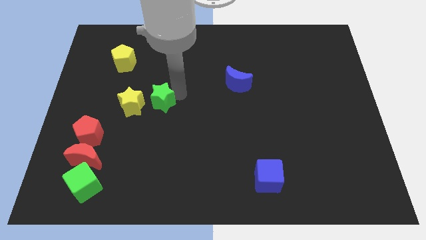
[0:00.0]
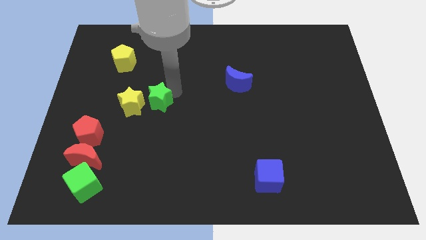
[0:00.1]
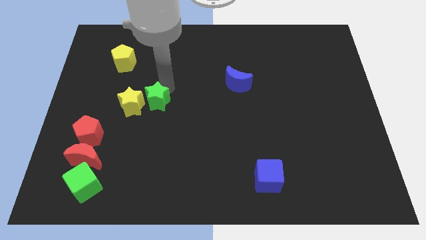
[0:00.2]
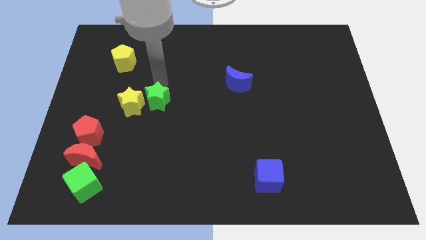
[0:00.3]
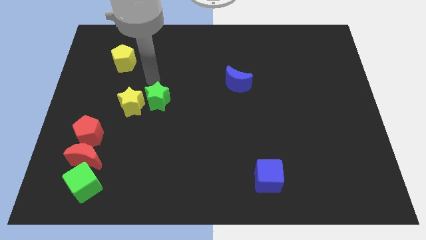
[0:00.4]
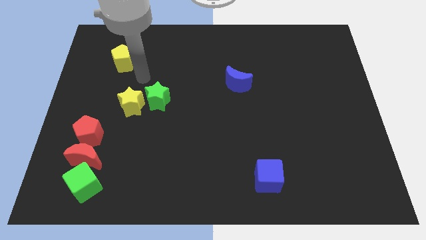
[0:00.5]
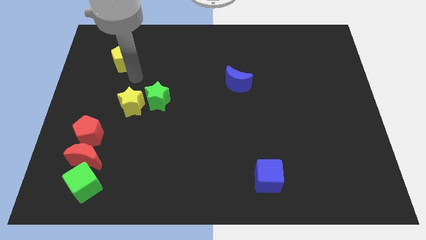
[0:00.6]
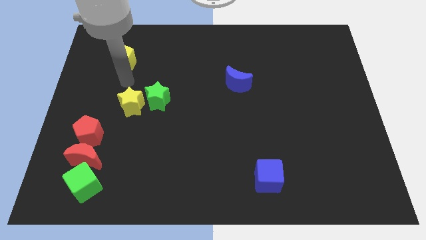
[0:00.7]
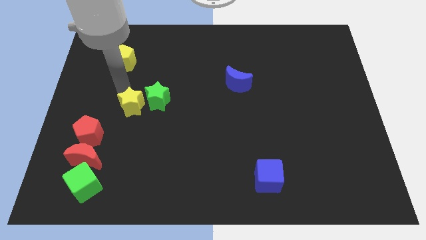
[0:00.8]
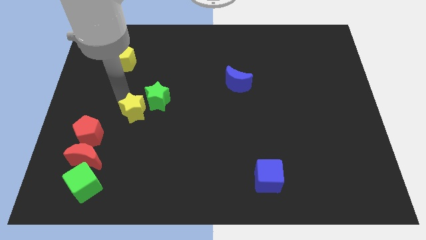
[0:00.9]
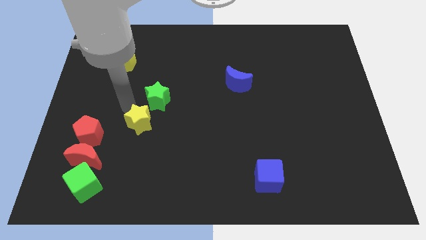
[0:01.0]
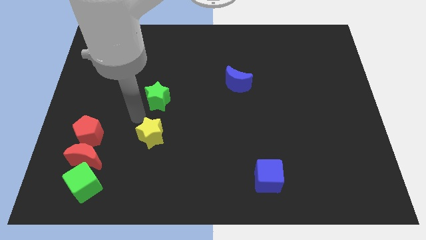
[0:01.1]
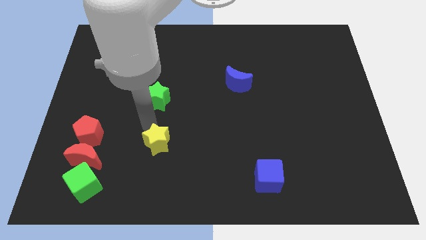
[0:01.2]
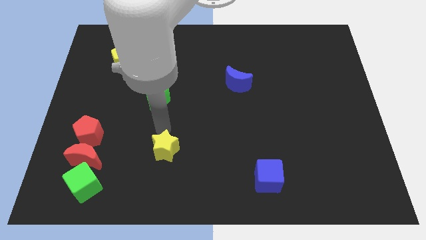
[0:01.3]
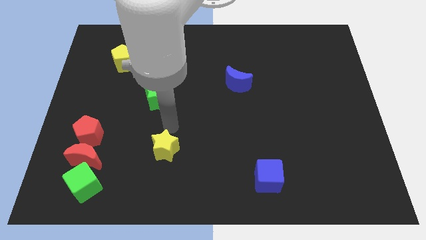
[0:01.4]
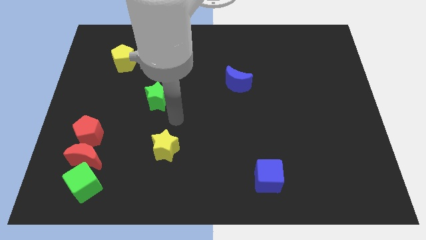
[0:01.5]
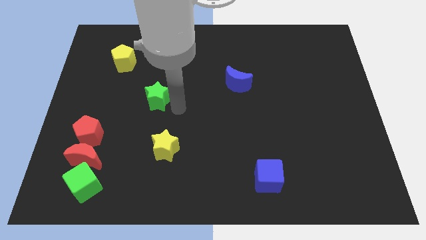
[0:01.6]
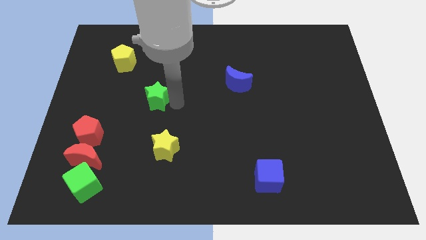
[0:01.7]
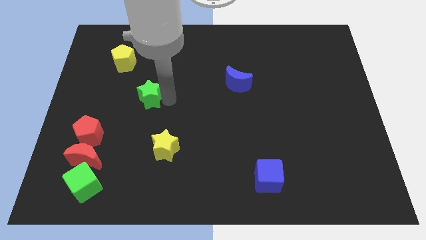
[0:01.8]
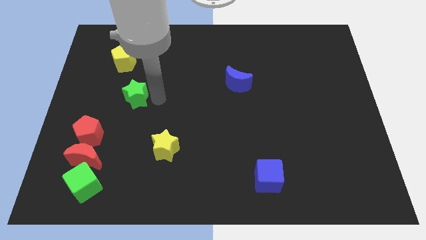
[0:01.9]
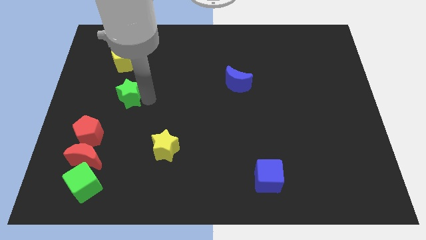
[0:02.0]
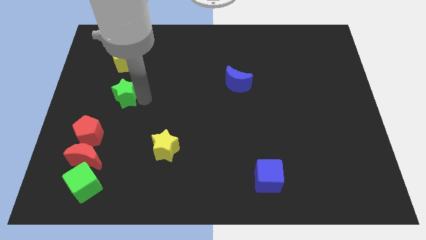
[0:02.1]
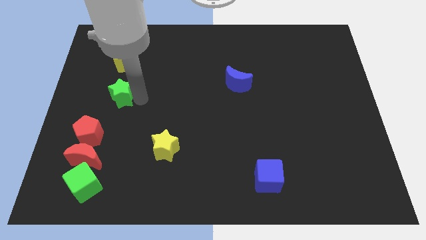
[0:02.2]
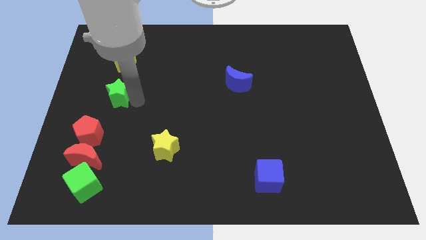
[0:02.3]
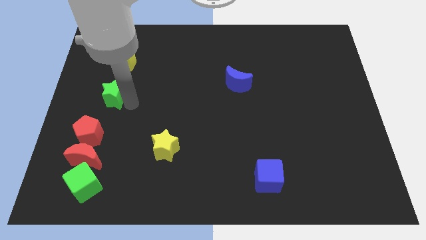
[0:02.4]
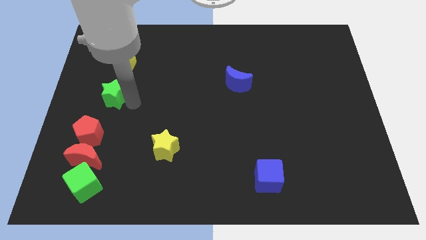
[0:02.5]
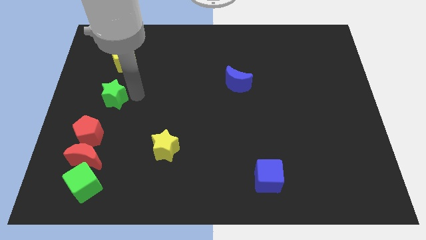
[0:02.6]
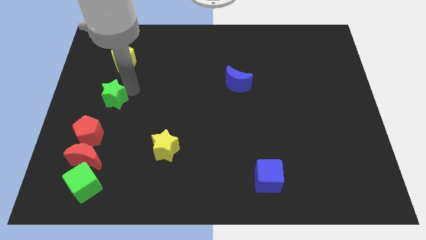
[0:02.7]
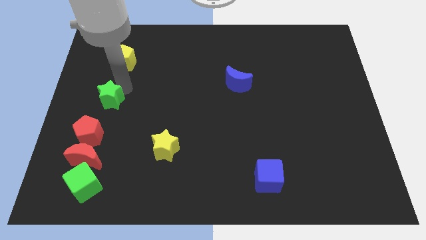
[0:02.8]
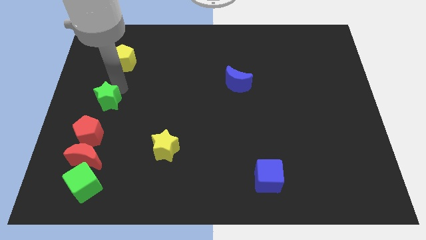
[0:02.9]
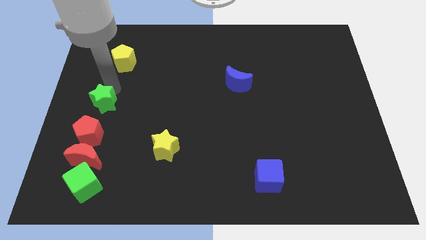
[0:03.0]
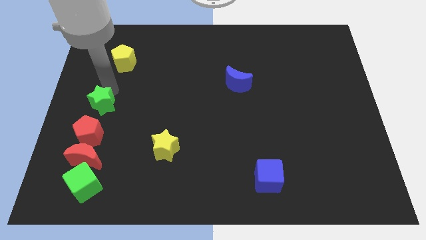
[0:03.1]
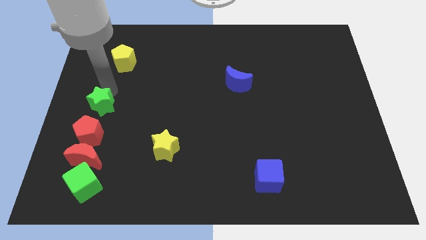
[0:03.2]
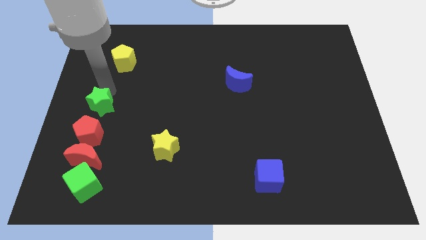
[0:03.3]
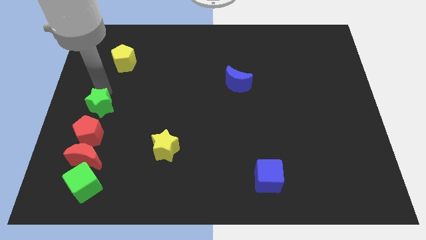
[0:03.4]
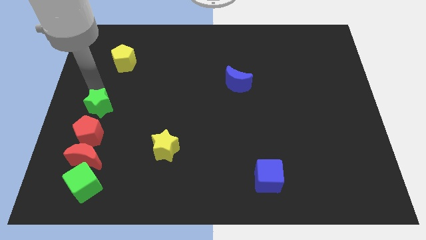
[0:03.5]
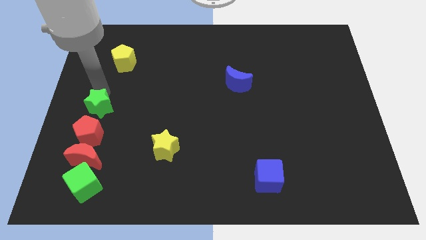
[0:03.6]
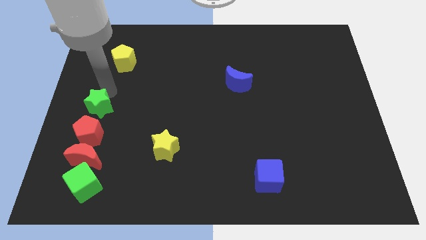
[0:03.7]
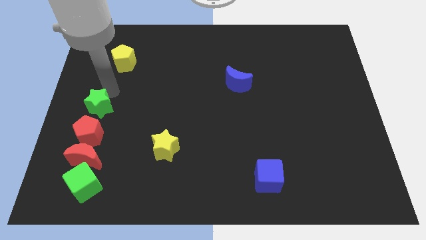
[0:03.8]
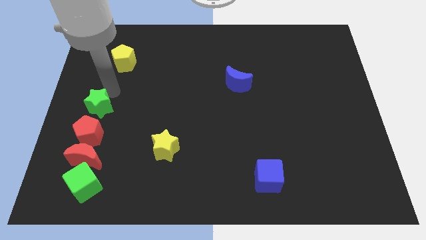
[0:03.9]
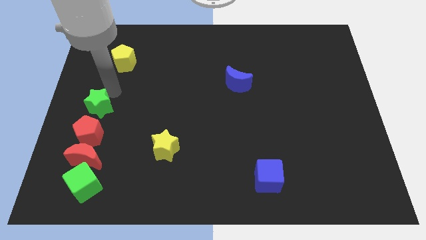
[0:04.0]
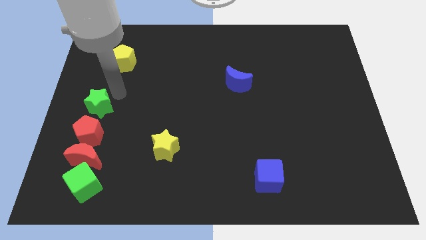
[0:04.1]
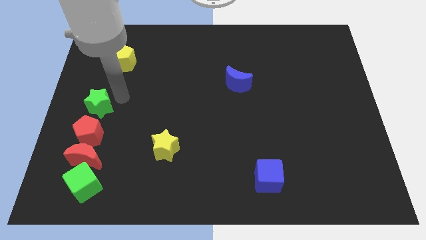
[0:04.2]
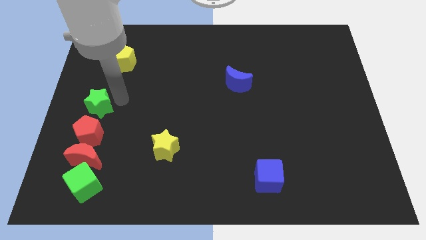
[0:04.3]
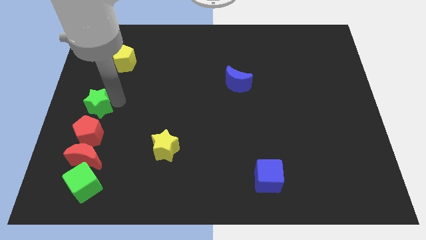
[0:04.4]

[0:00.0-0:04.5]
place the yellow star in between the blue cube and green star

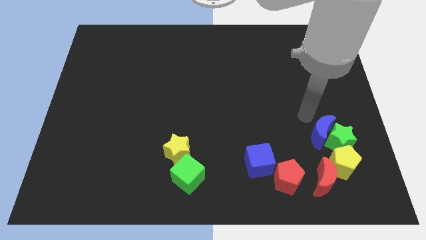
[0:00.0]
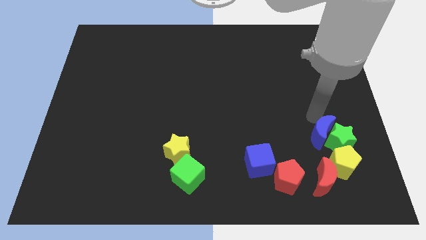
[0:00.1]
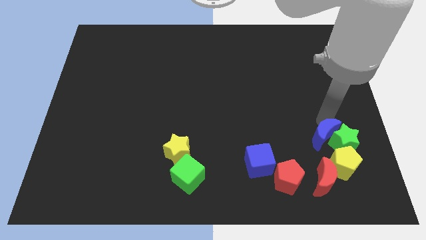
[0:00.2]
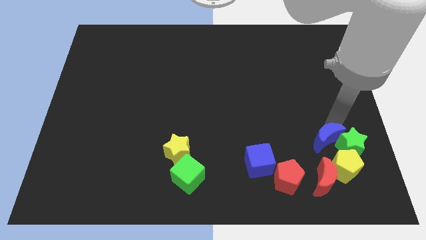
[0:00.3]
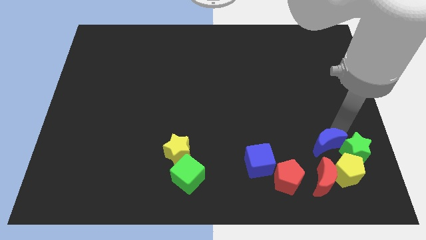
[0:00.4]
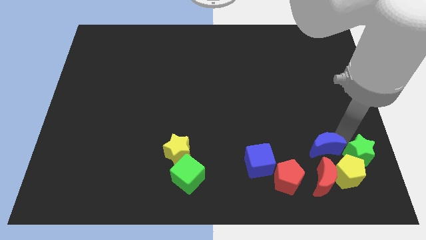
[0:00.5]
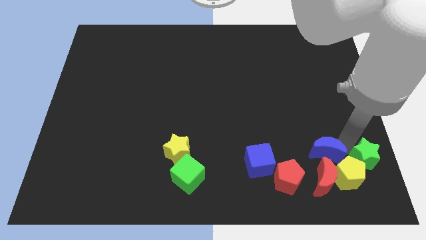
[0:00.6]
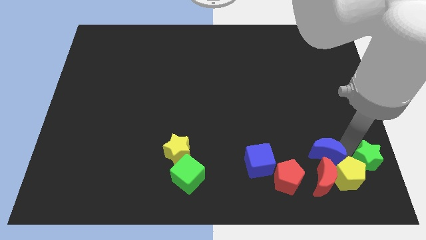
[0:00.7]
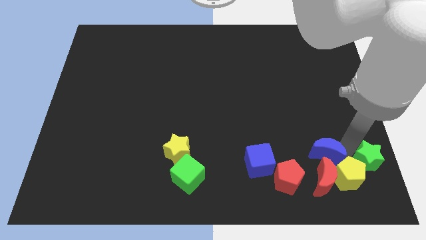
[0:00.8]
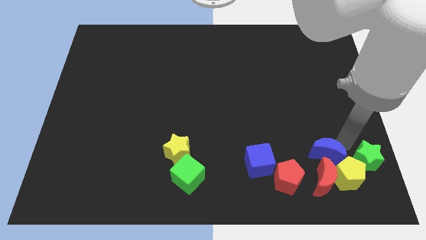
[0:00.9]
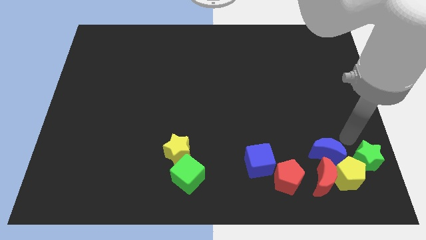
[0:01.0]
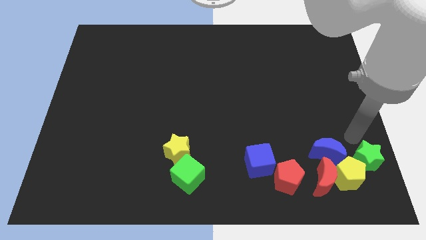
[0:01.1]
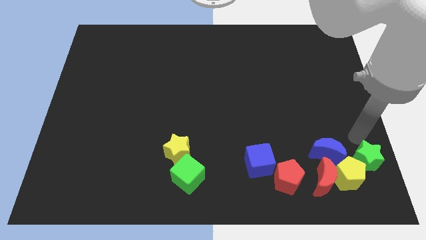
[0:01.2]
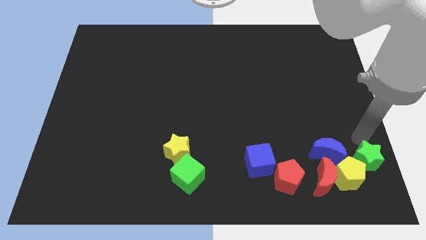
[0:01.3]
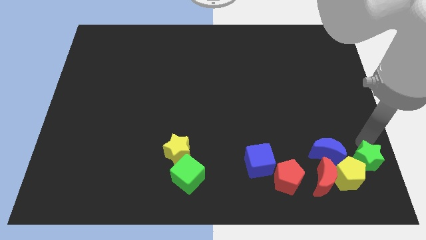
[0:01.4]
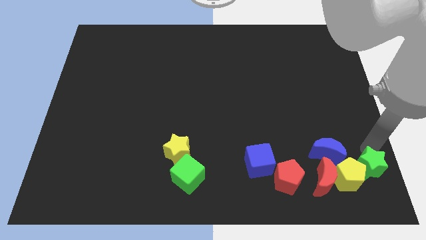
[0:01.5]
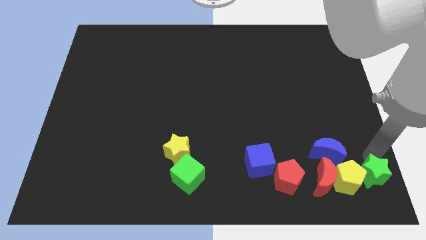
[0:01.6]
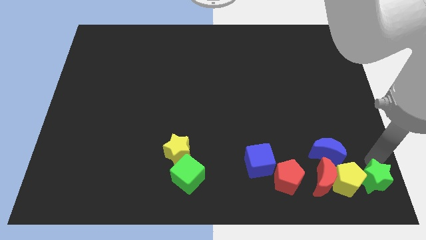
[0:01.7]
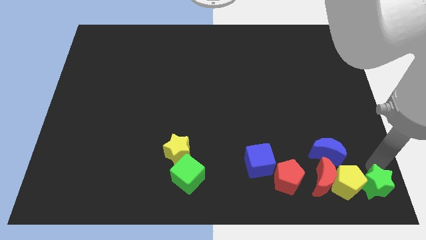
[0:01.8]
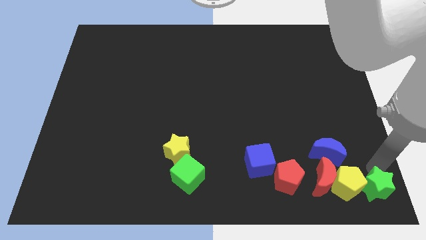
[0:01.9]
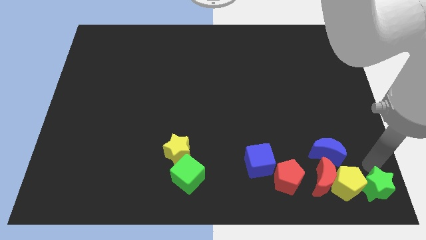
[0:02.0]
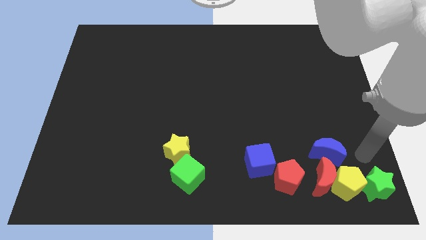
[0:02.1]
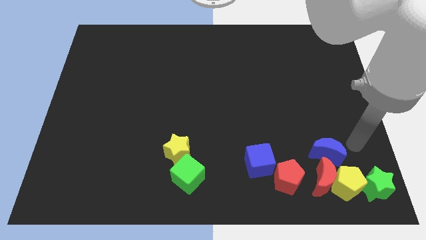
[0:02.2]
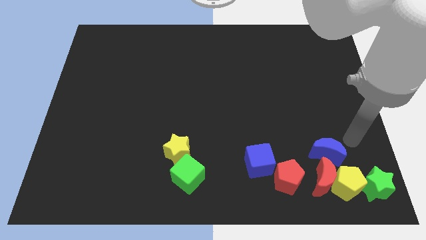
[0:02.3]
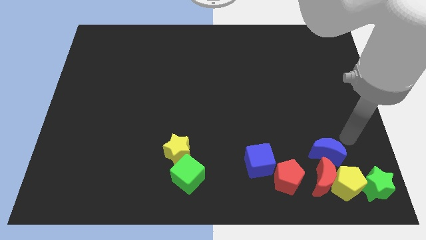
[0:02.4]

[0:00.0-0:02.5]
push yellow pentagon and green star downwards

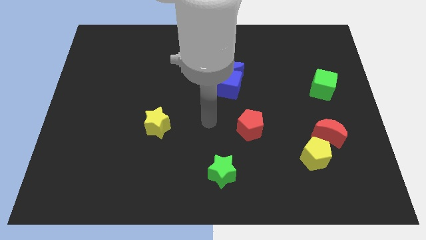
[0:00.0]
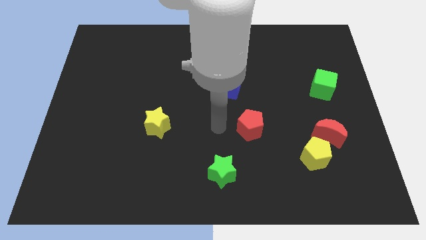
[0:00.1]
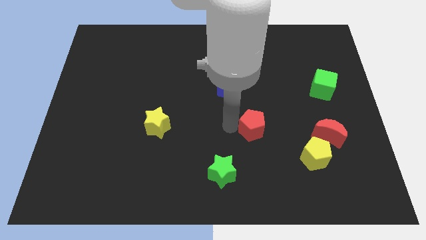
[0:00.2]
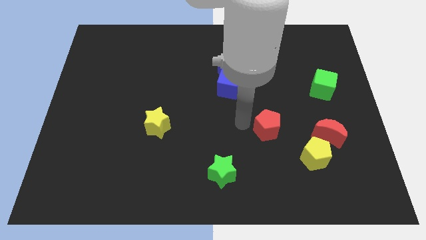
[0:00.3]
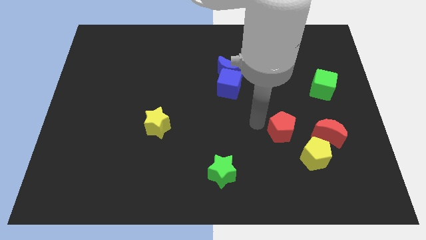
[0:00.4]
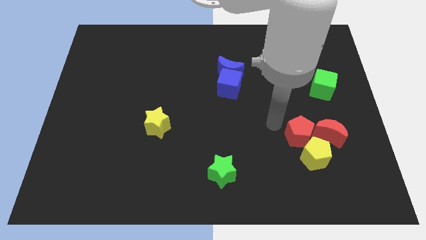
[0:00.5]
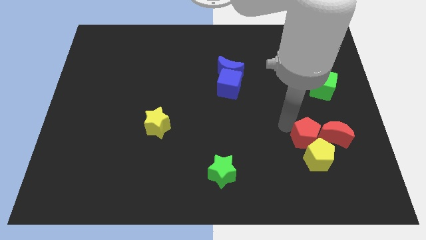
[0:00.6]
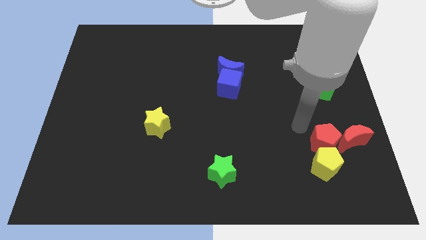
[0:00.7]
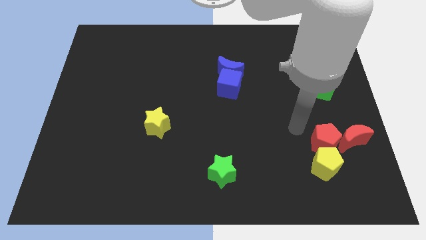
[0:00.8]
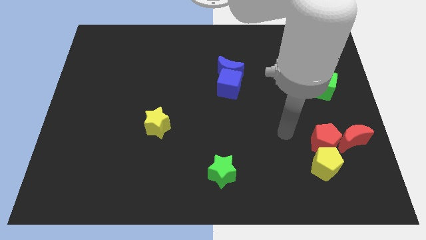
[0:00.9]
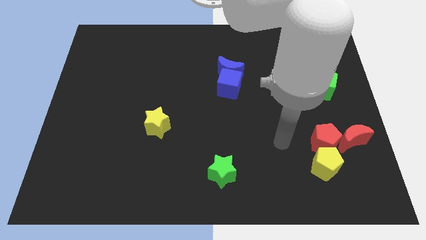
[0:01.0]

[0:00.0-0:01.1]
push the red pentagon to touch the red crescent and yellow pentagon

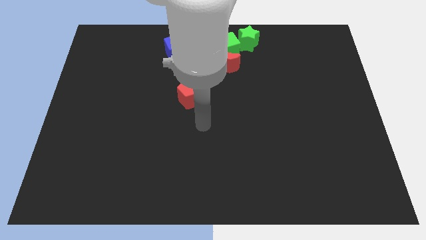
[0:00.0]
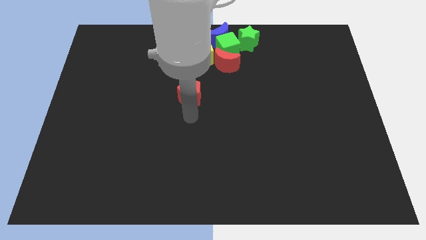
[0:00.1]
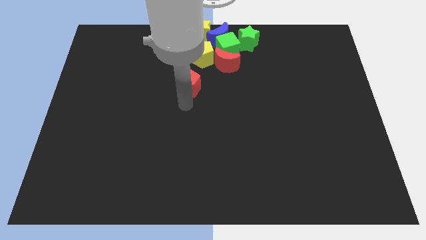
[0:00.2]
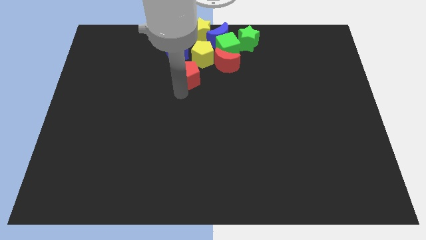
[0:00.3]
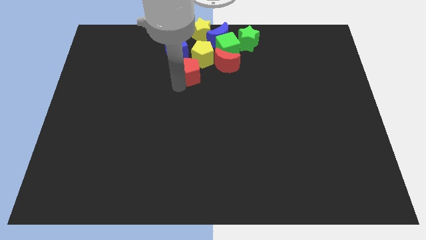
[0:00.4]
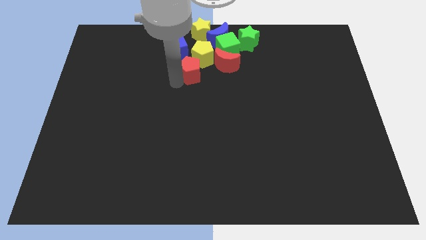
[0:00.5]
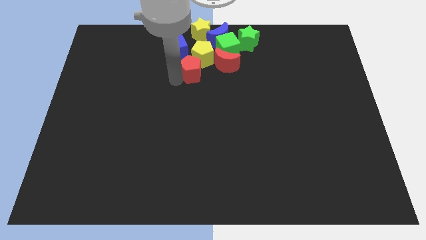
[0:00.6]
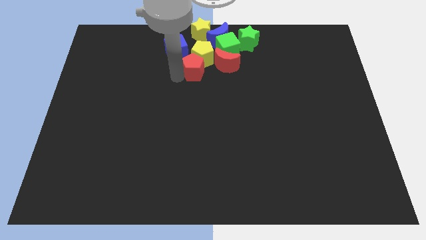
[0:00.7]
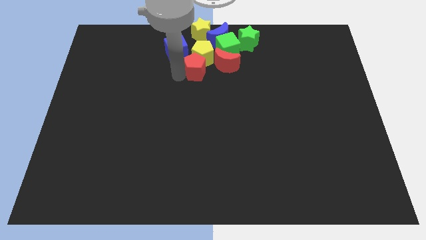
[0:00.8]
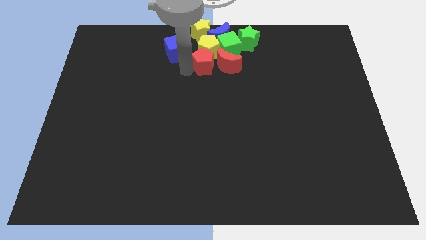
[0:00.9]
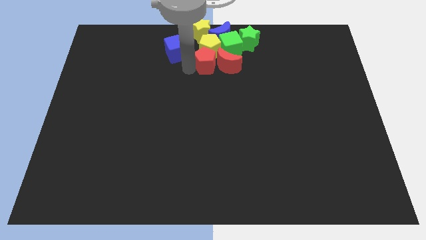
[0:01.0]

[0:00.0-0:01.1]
move the red pentagon into the yellow pentagon
